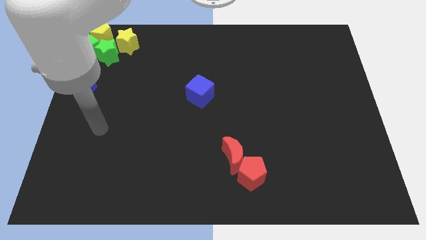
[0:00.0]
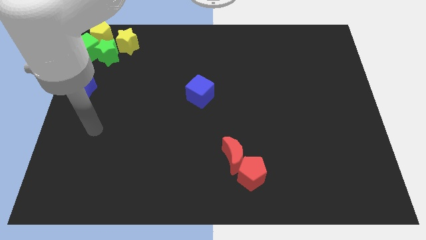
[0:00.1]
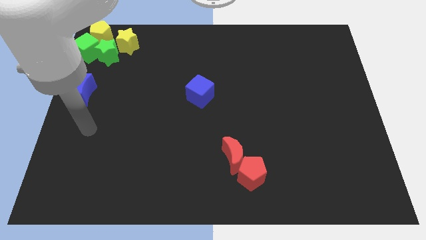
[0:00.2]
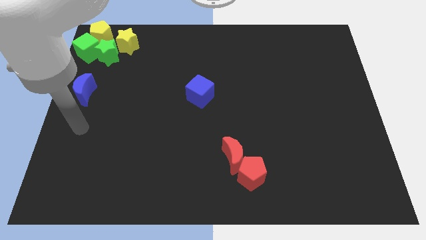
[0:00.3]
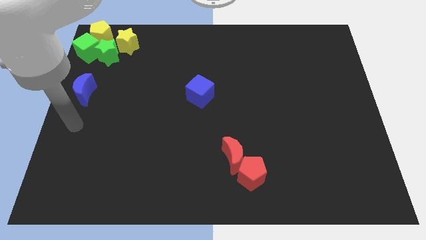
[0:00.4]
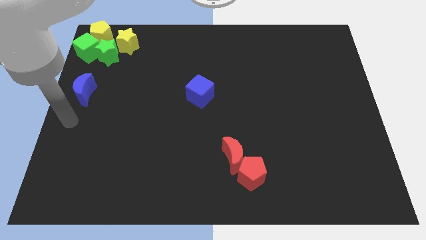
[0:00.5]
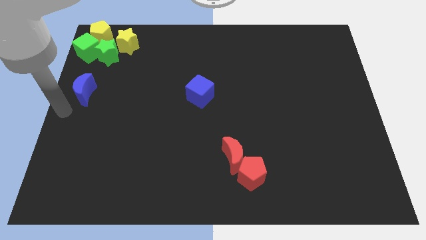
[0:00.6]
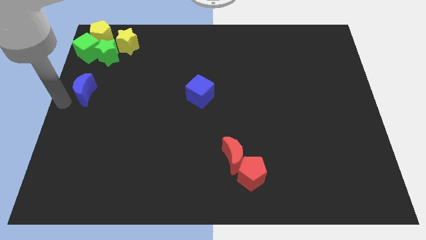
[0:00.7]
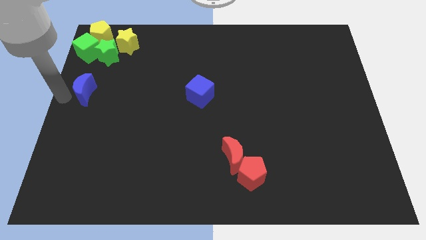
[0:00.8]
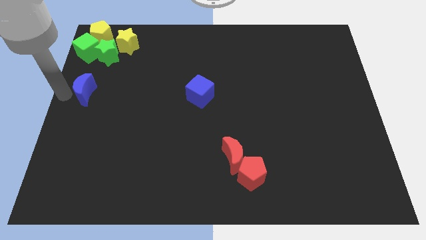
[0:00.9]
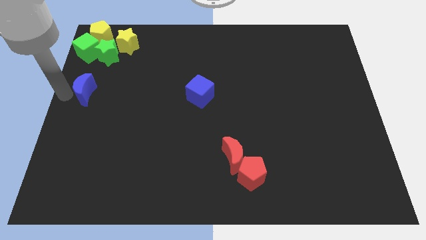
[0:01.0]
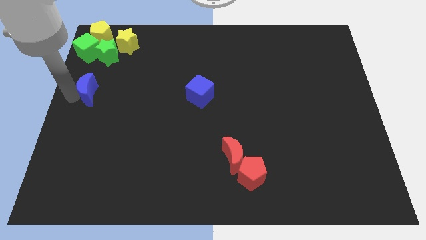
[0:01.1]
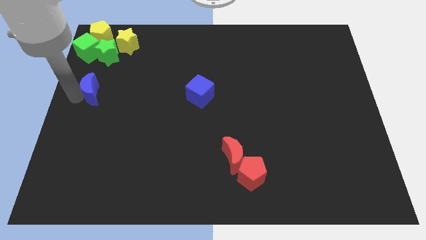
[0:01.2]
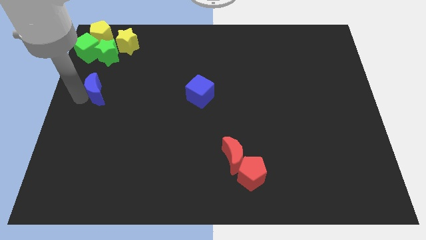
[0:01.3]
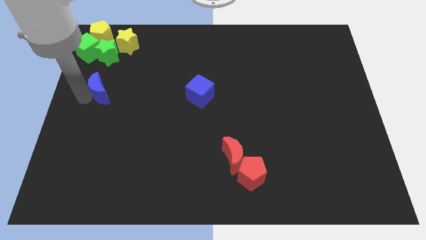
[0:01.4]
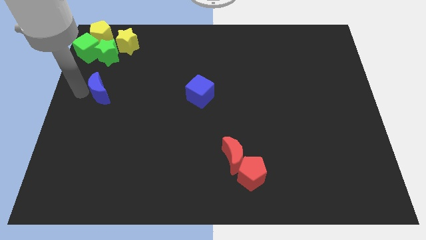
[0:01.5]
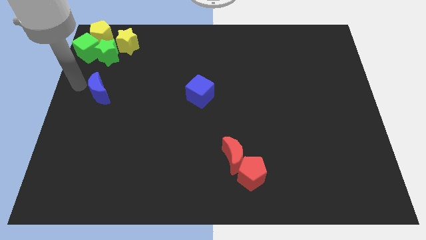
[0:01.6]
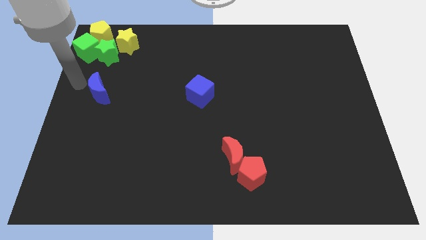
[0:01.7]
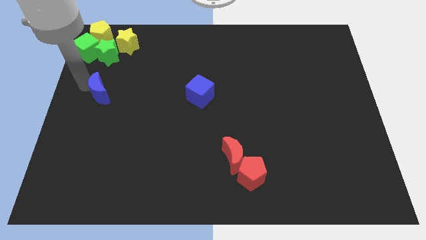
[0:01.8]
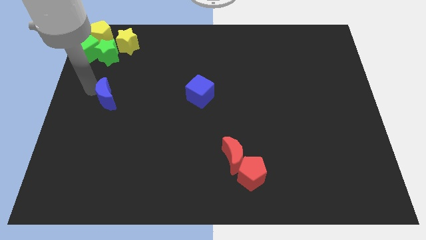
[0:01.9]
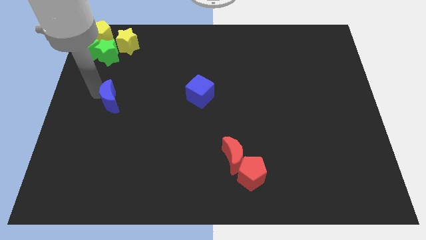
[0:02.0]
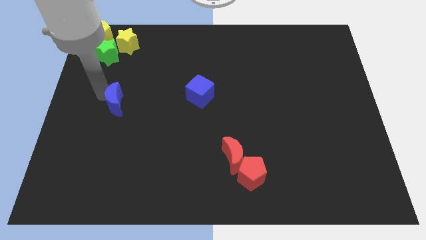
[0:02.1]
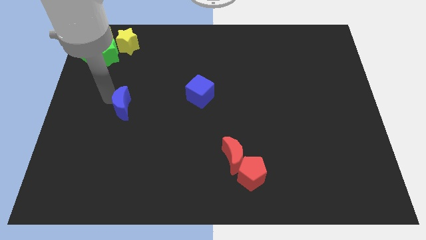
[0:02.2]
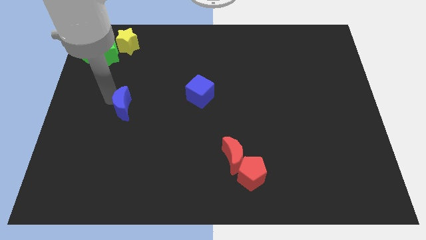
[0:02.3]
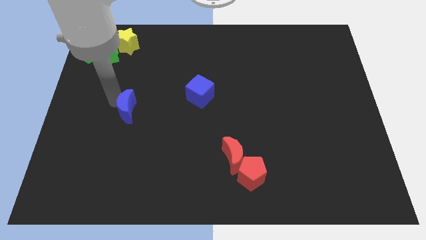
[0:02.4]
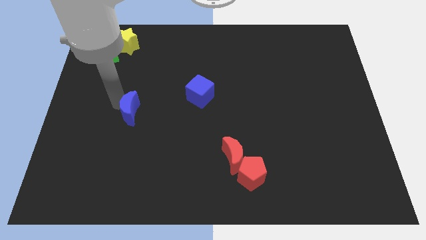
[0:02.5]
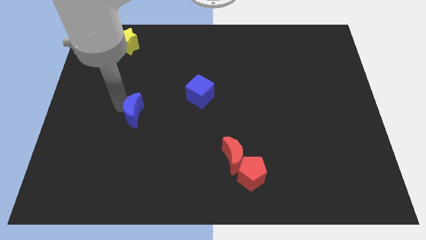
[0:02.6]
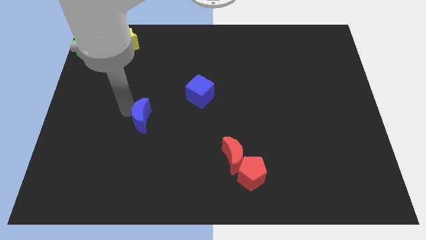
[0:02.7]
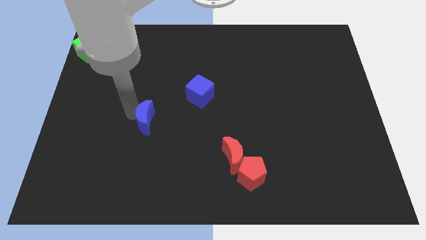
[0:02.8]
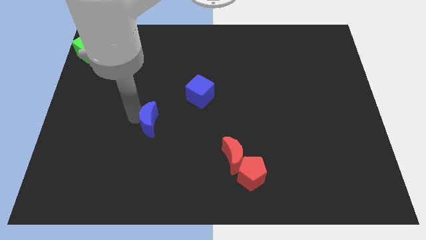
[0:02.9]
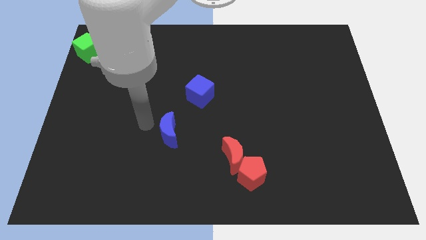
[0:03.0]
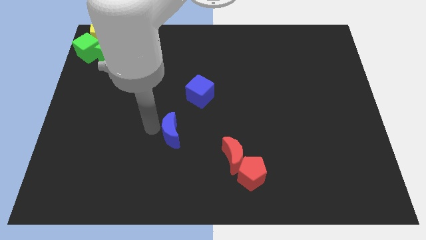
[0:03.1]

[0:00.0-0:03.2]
move the blue moon diagonal below the blue cube

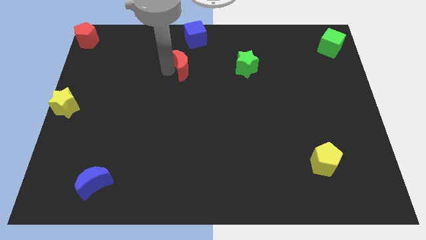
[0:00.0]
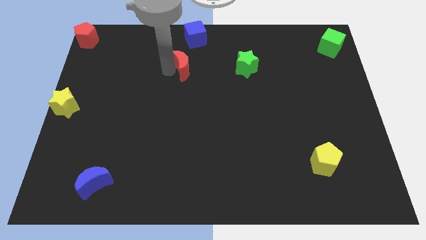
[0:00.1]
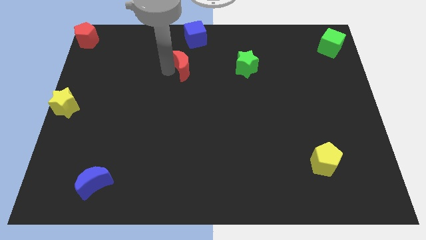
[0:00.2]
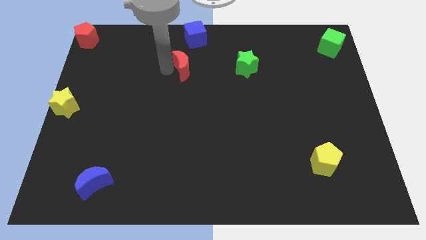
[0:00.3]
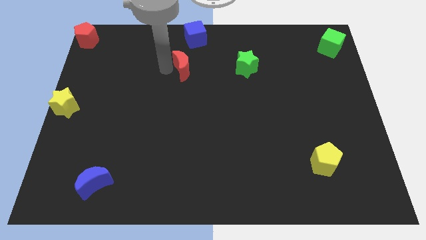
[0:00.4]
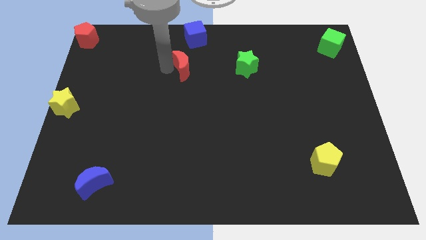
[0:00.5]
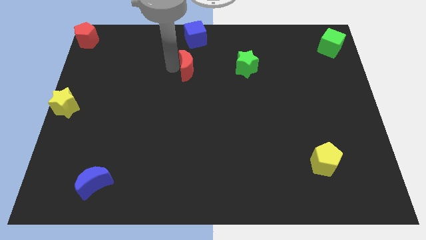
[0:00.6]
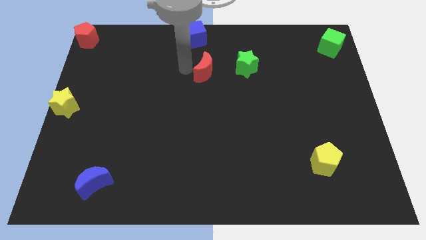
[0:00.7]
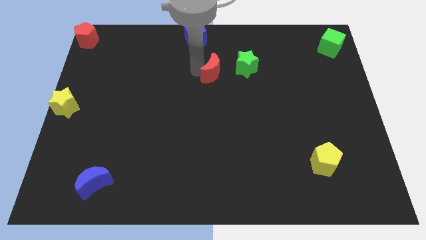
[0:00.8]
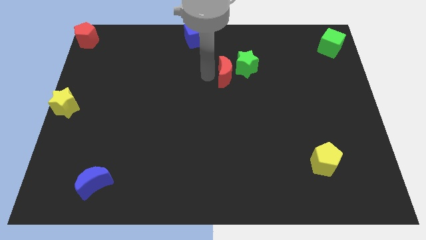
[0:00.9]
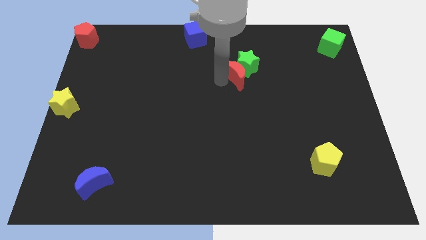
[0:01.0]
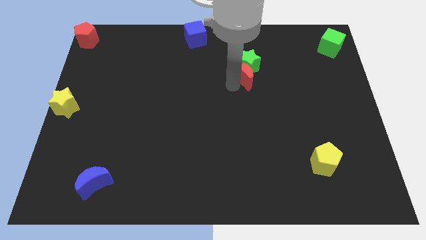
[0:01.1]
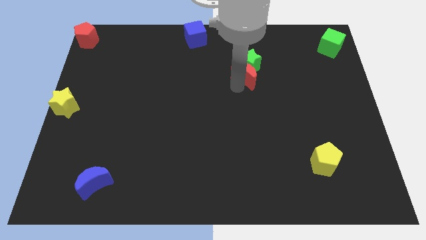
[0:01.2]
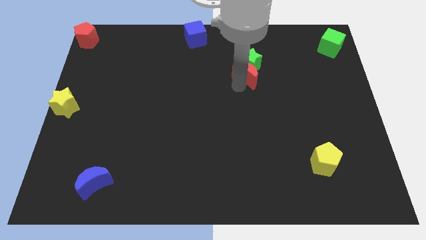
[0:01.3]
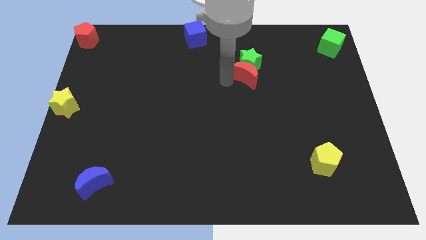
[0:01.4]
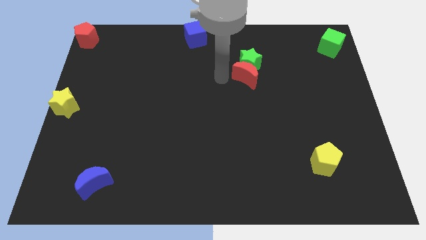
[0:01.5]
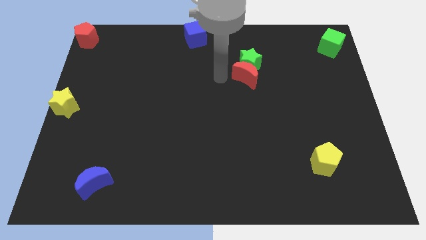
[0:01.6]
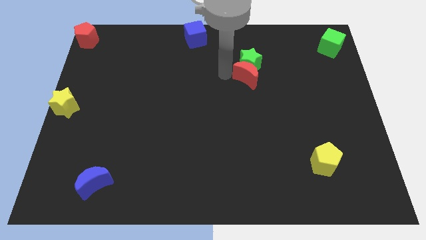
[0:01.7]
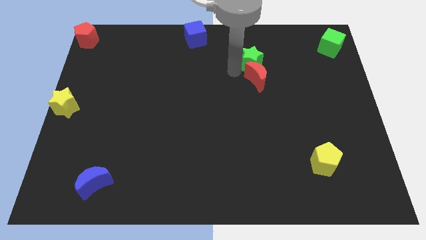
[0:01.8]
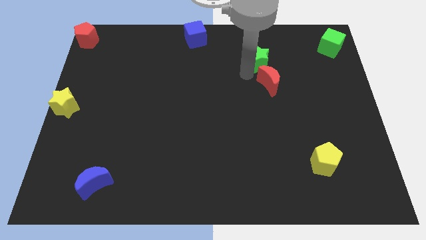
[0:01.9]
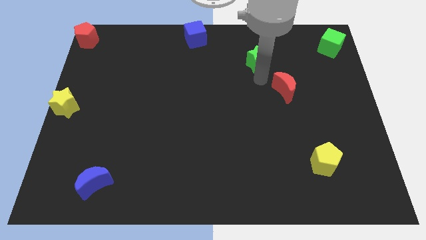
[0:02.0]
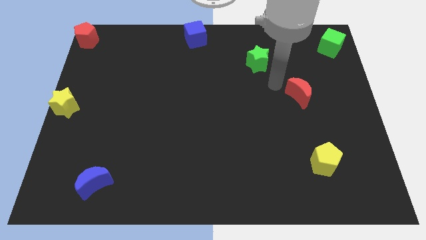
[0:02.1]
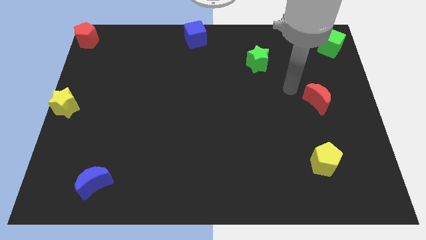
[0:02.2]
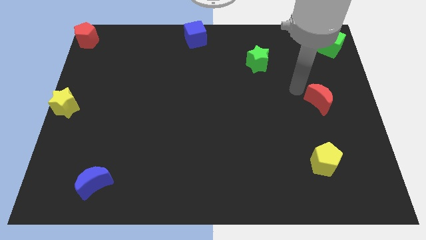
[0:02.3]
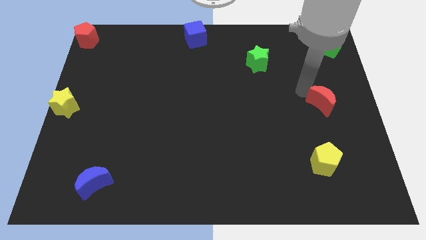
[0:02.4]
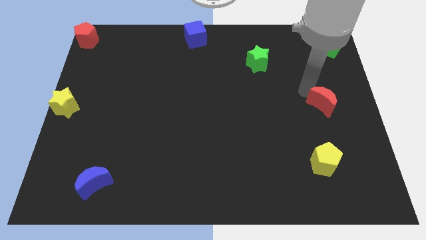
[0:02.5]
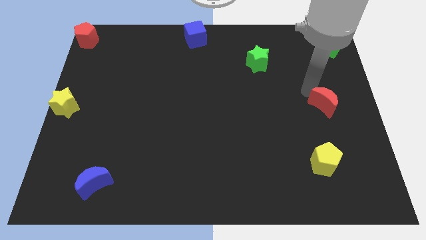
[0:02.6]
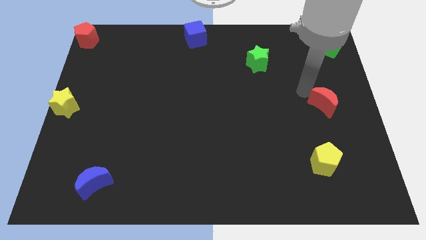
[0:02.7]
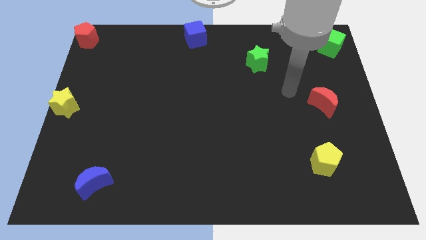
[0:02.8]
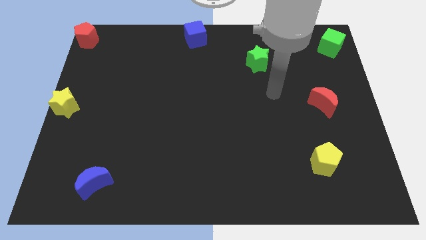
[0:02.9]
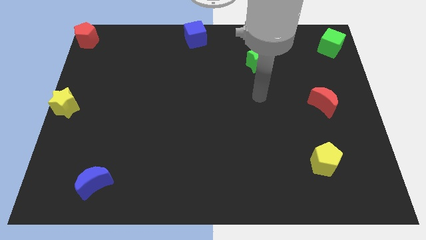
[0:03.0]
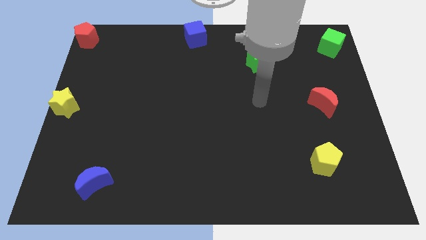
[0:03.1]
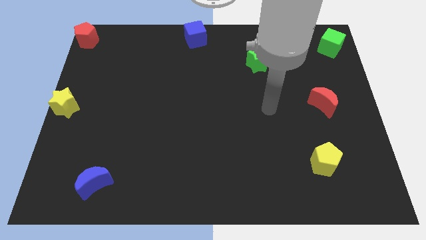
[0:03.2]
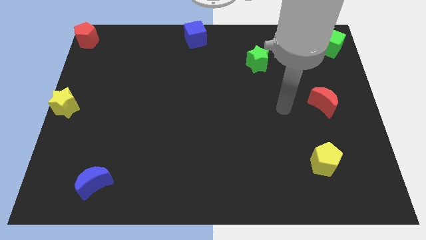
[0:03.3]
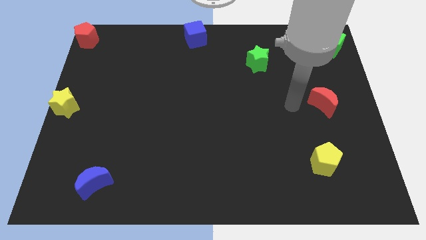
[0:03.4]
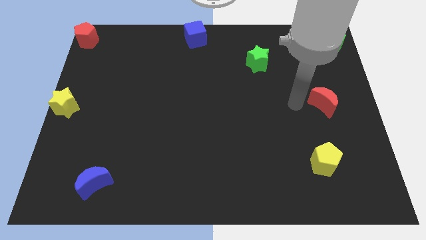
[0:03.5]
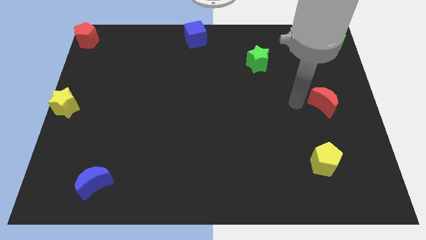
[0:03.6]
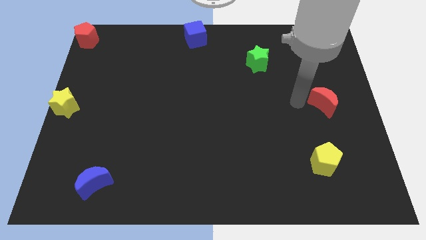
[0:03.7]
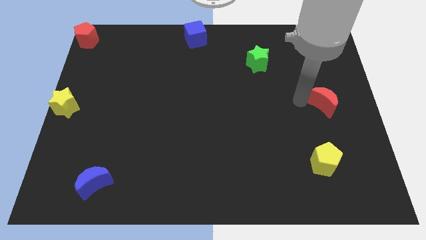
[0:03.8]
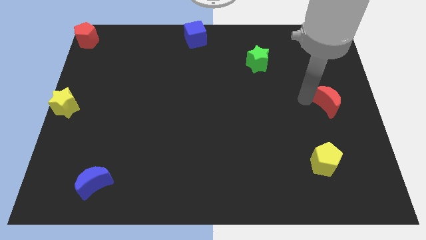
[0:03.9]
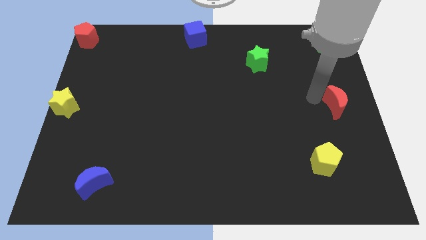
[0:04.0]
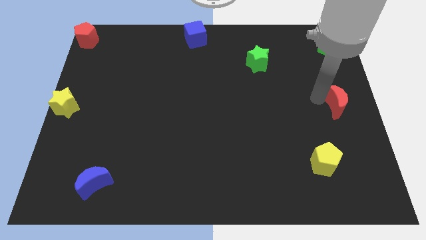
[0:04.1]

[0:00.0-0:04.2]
push red crescent to the center right of the board

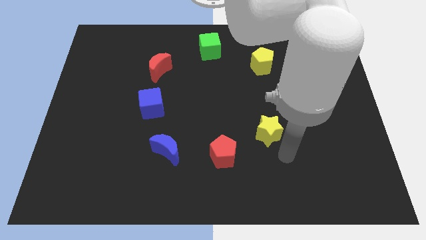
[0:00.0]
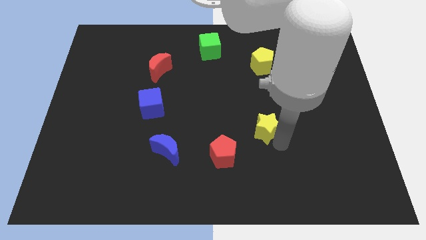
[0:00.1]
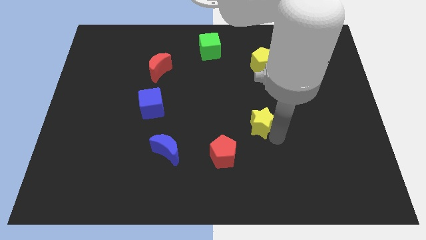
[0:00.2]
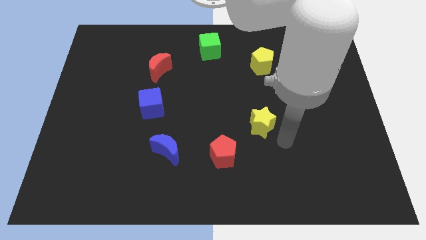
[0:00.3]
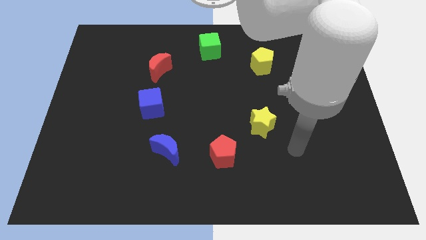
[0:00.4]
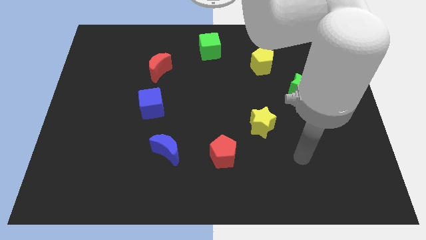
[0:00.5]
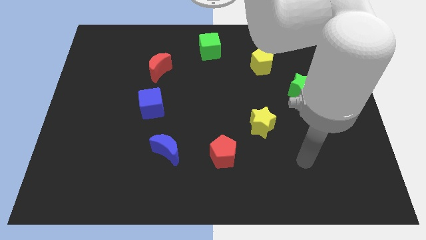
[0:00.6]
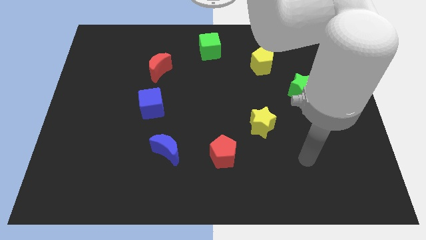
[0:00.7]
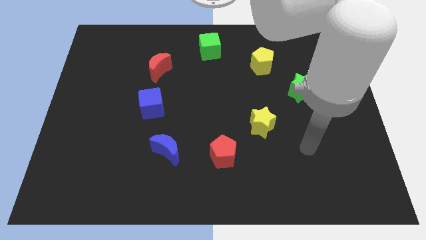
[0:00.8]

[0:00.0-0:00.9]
slightly push the yellow star to the center of the board

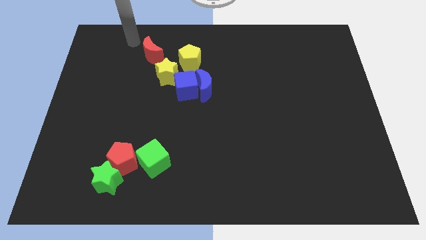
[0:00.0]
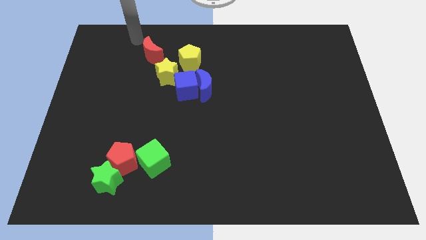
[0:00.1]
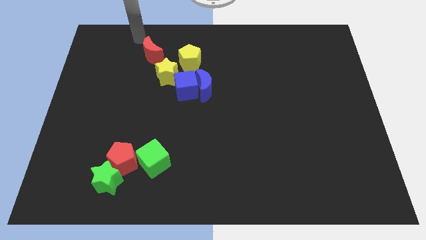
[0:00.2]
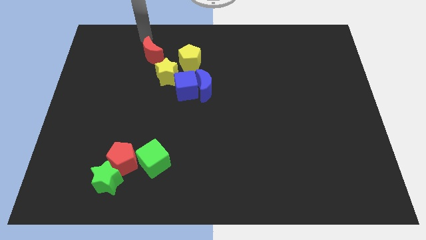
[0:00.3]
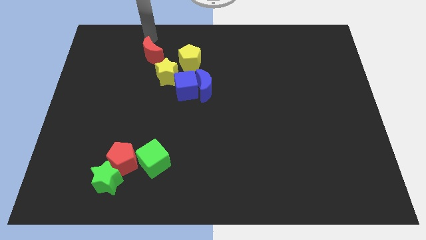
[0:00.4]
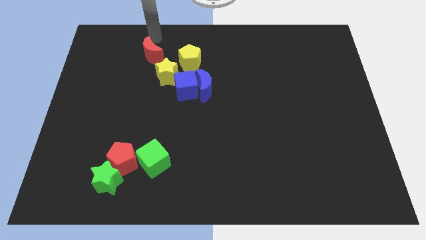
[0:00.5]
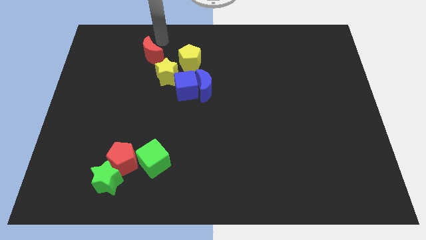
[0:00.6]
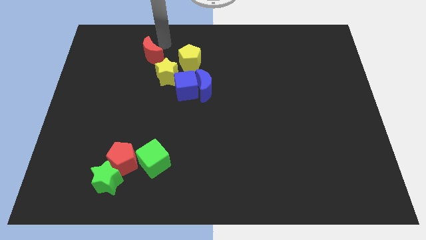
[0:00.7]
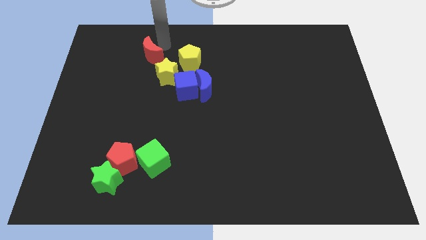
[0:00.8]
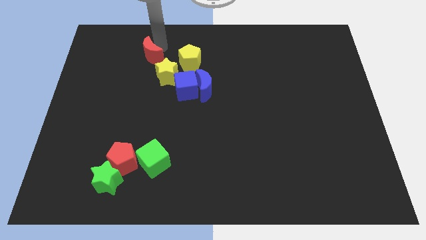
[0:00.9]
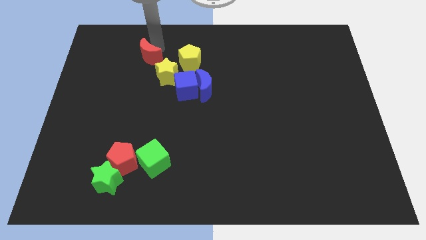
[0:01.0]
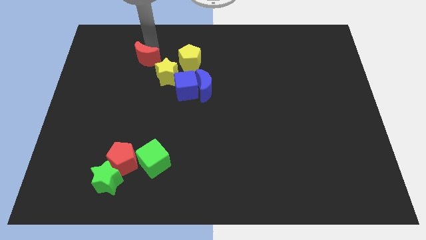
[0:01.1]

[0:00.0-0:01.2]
move red moon slightly towards left of the board
